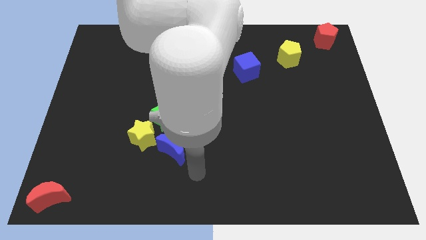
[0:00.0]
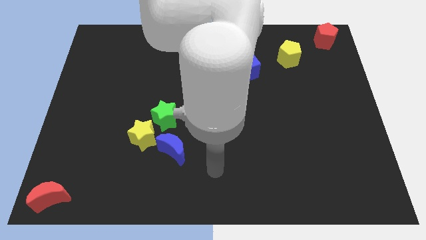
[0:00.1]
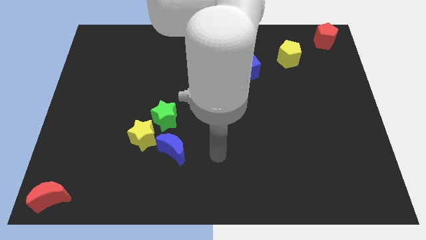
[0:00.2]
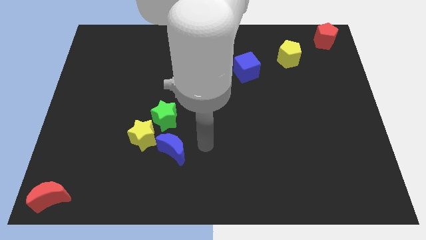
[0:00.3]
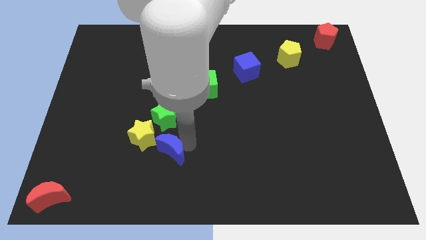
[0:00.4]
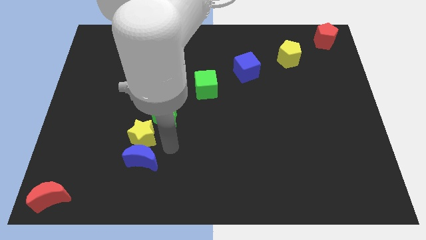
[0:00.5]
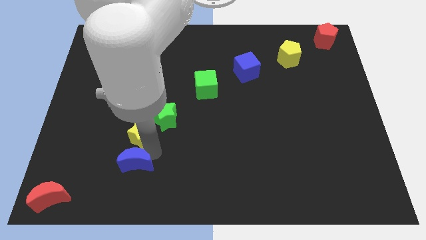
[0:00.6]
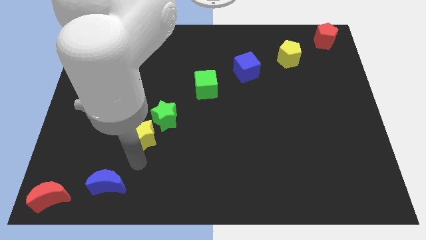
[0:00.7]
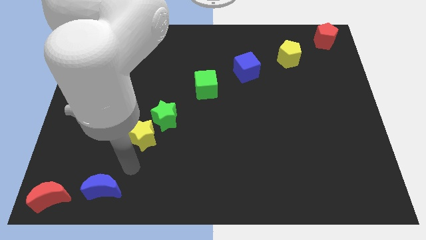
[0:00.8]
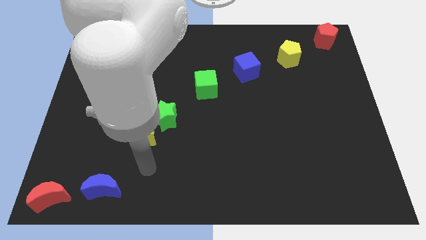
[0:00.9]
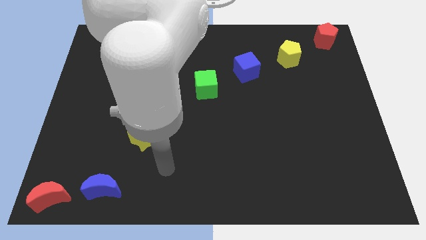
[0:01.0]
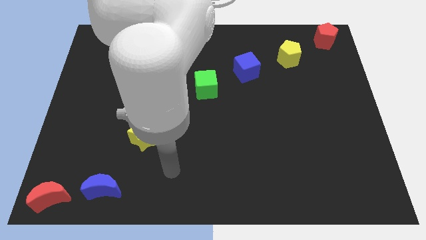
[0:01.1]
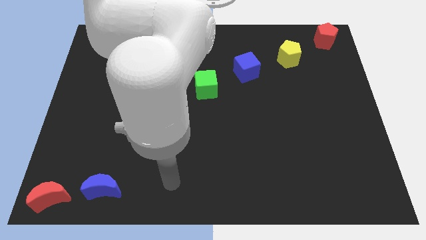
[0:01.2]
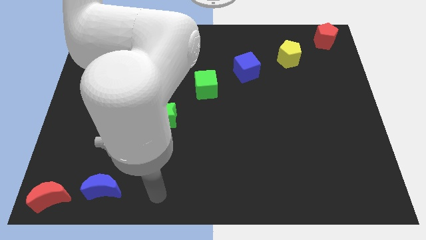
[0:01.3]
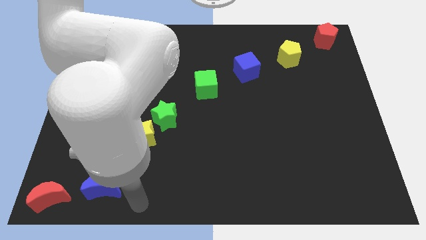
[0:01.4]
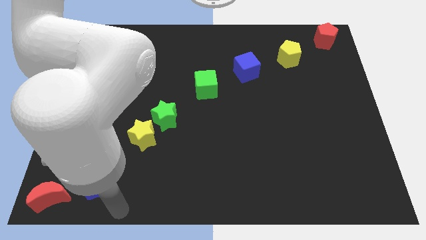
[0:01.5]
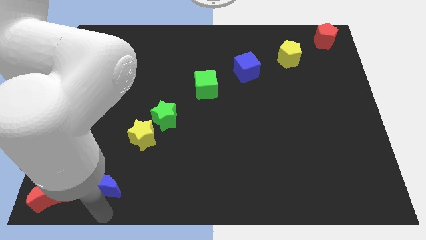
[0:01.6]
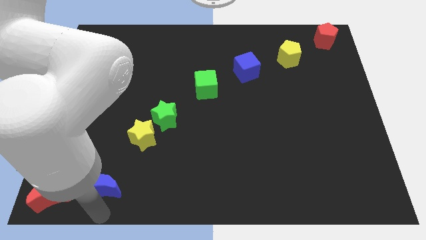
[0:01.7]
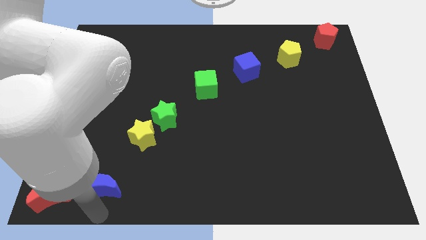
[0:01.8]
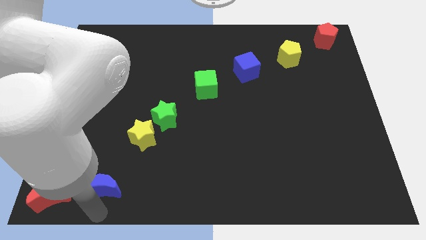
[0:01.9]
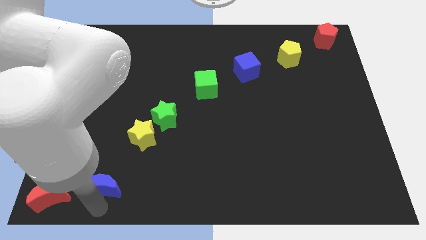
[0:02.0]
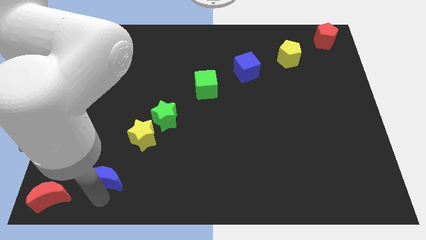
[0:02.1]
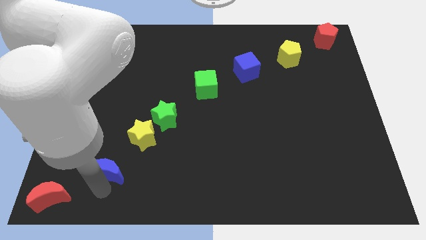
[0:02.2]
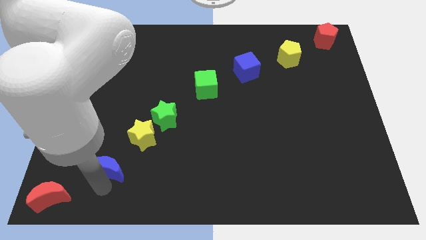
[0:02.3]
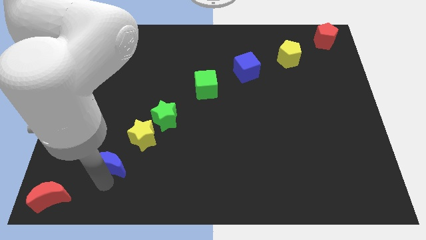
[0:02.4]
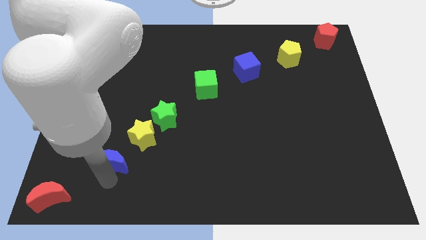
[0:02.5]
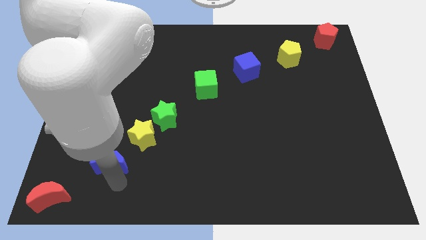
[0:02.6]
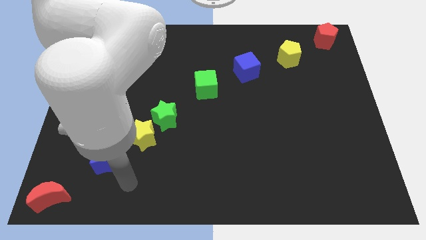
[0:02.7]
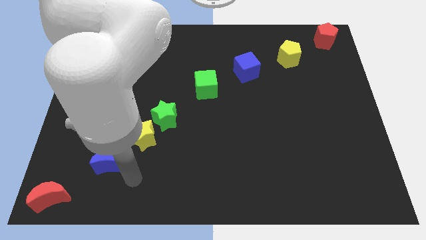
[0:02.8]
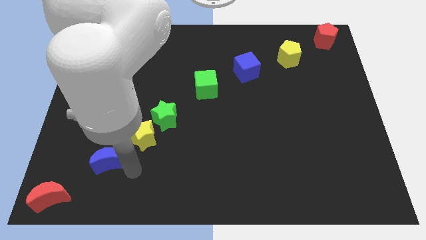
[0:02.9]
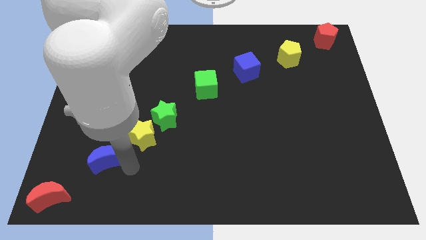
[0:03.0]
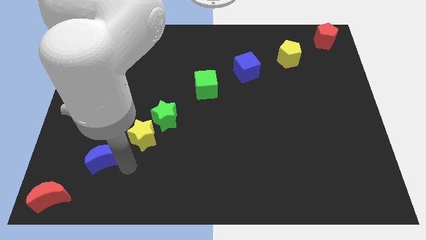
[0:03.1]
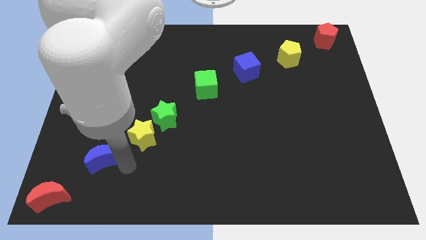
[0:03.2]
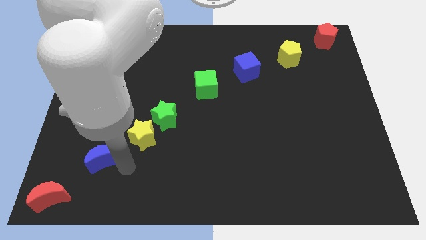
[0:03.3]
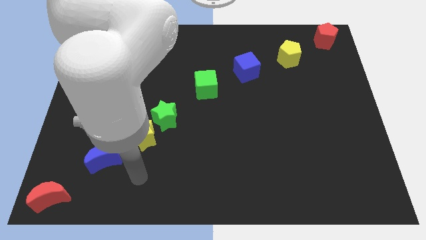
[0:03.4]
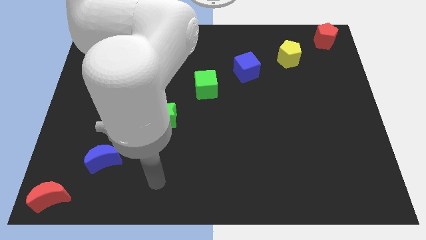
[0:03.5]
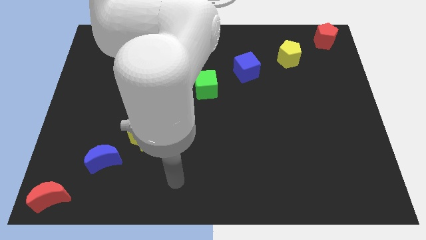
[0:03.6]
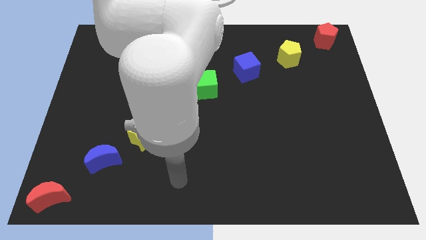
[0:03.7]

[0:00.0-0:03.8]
drag the blue moon diagonally to the bottom left of the yellow star to form a diagonal line

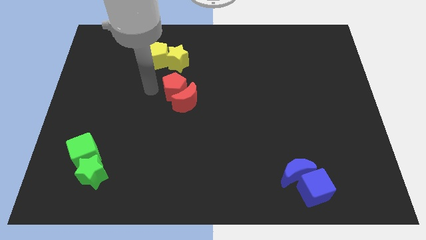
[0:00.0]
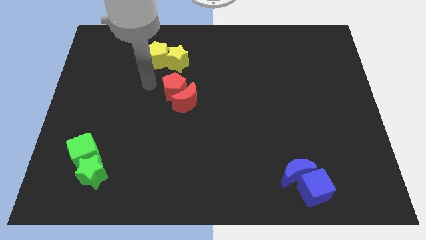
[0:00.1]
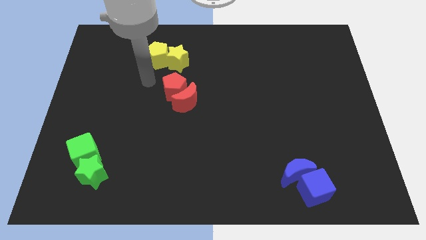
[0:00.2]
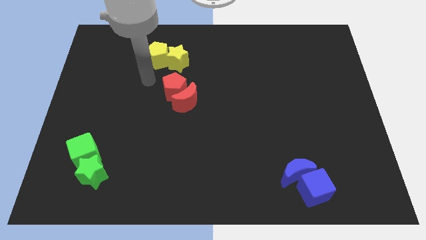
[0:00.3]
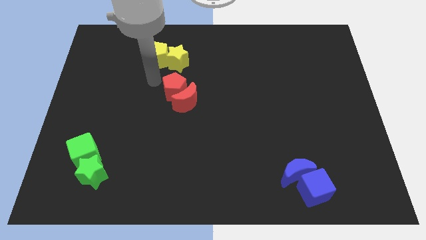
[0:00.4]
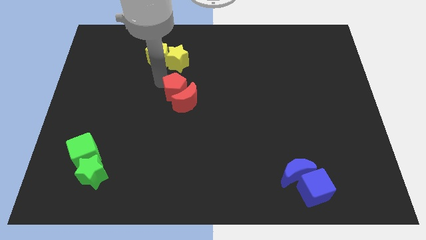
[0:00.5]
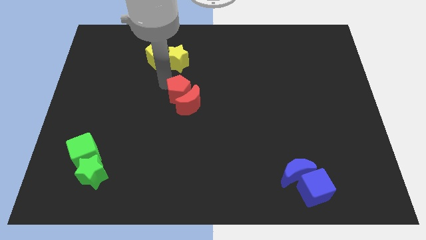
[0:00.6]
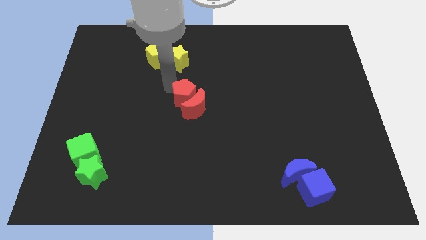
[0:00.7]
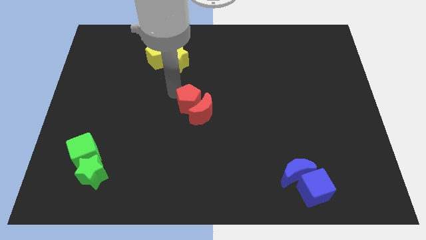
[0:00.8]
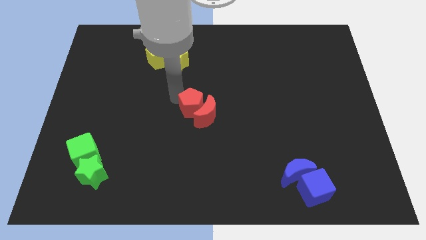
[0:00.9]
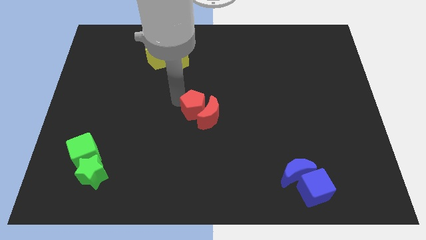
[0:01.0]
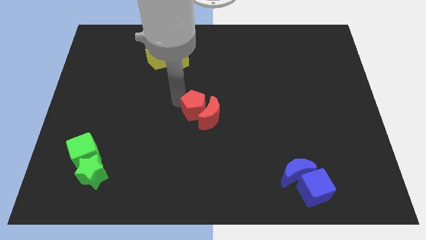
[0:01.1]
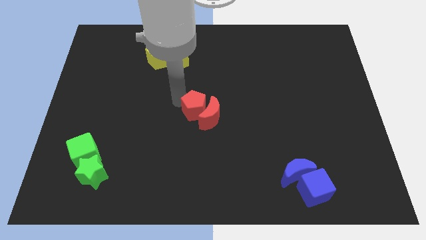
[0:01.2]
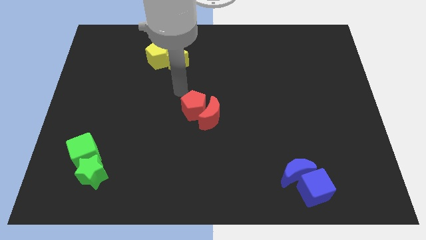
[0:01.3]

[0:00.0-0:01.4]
push the red blocks towards the center of the table

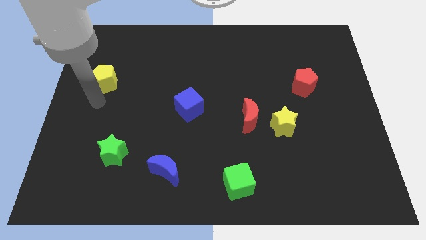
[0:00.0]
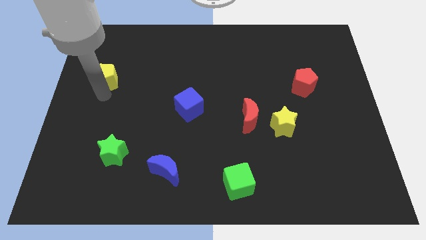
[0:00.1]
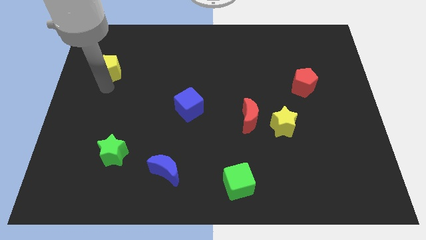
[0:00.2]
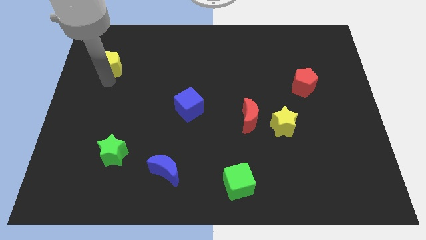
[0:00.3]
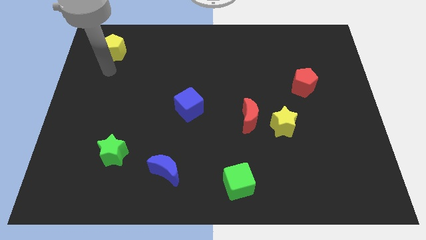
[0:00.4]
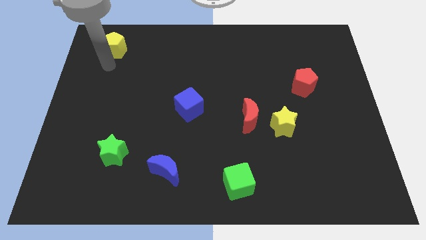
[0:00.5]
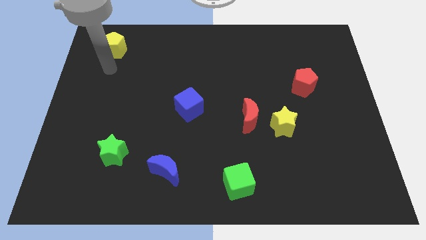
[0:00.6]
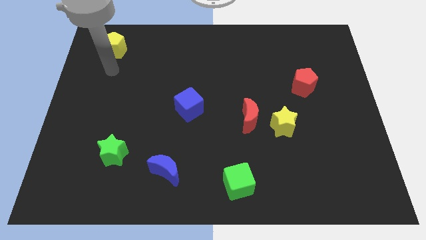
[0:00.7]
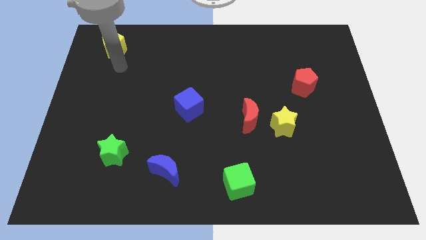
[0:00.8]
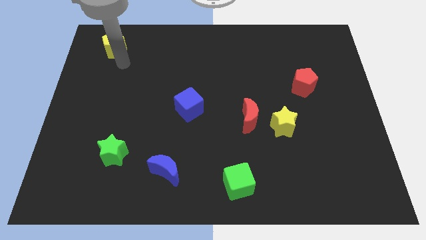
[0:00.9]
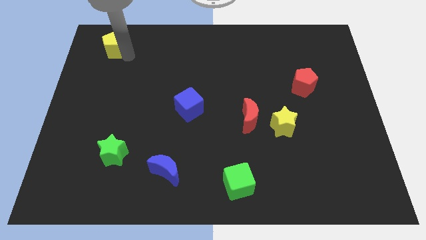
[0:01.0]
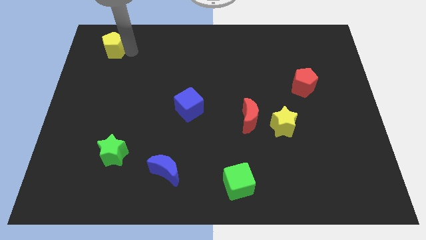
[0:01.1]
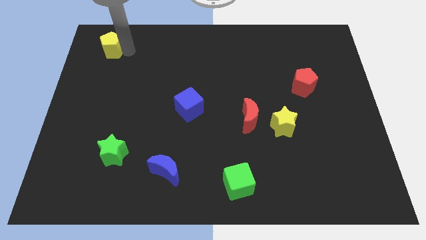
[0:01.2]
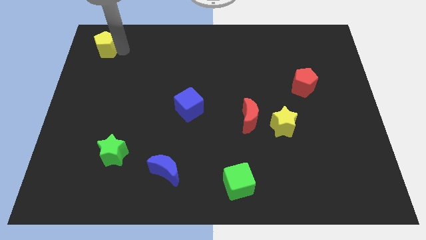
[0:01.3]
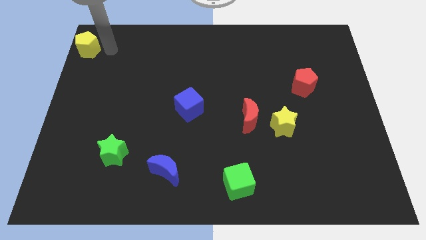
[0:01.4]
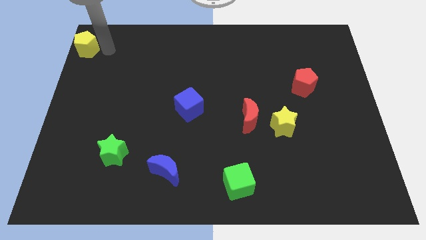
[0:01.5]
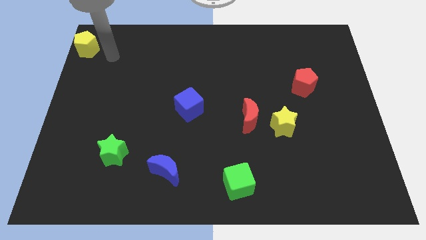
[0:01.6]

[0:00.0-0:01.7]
move the yellow pentagon diagonally to blue cube

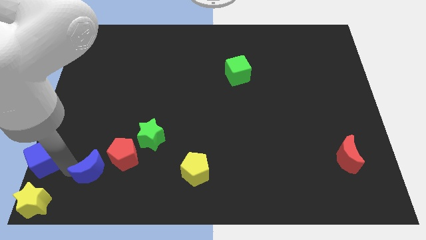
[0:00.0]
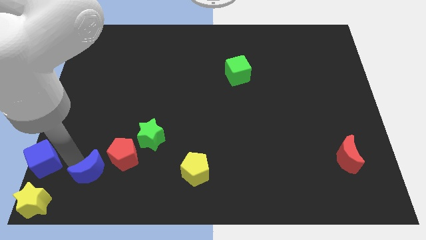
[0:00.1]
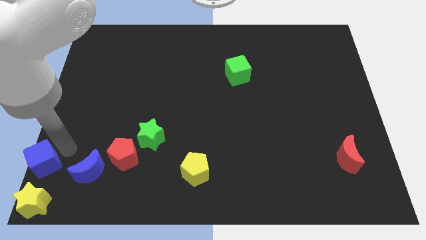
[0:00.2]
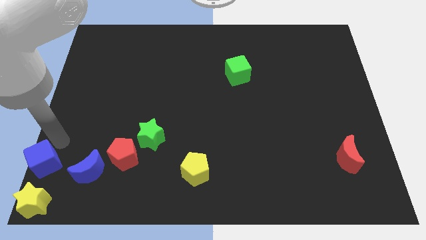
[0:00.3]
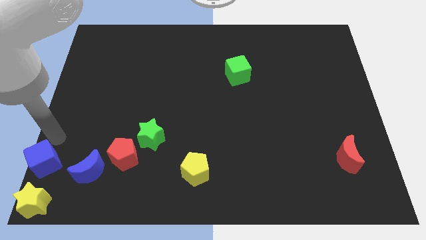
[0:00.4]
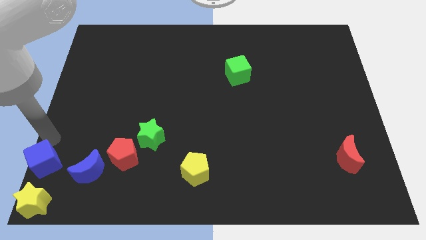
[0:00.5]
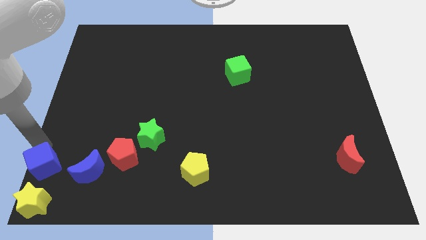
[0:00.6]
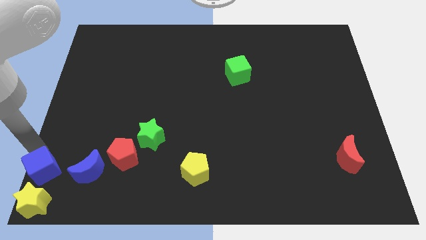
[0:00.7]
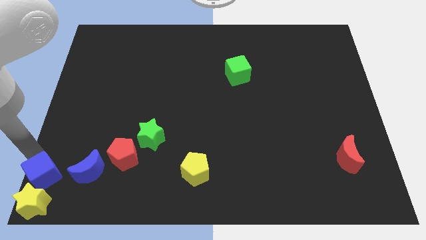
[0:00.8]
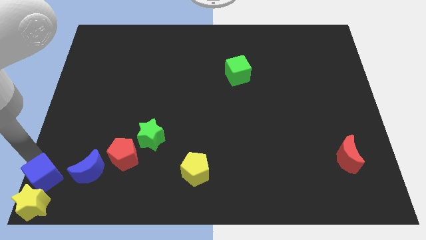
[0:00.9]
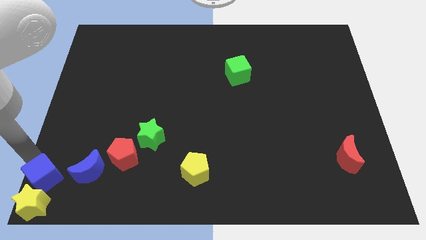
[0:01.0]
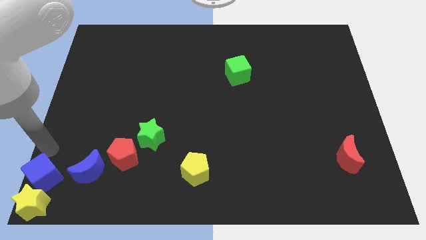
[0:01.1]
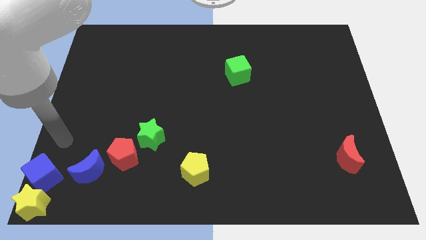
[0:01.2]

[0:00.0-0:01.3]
push the blue cube into yellow star

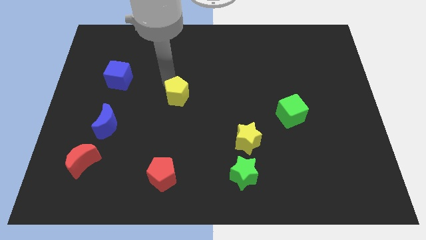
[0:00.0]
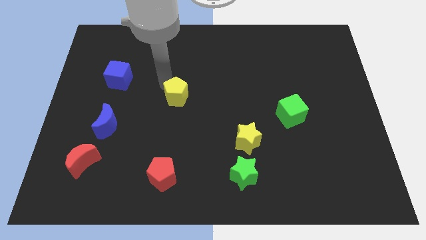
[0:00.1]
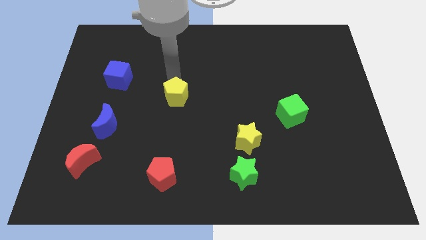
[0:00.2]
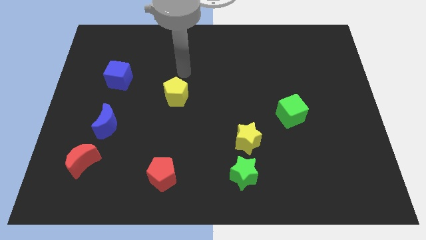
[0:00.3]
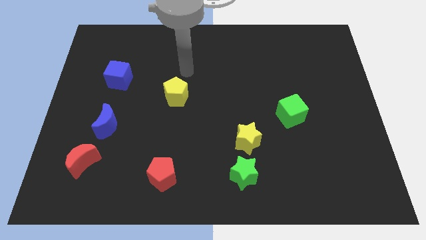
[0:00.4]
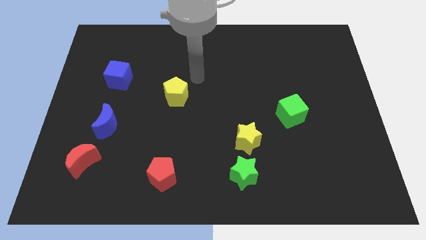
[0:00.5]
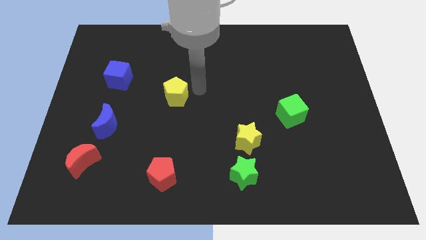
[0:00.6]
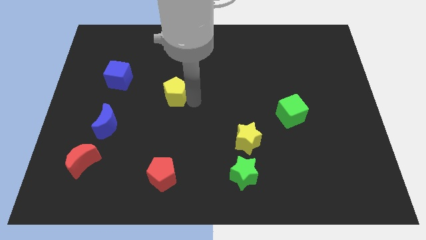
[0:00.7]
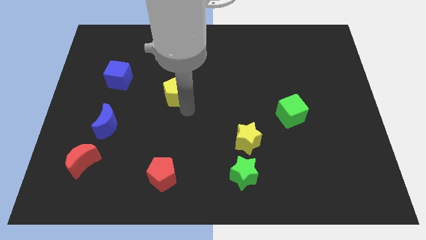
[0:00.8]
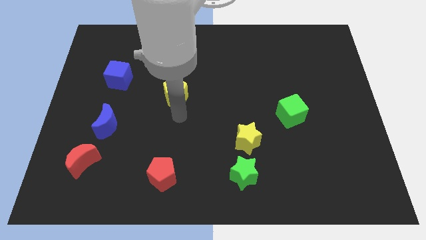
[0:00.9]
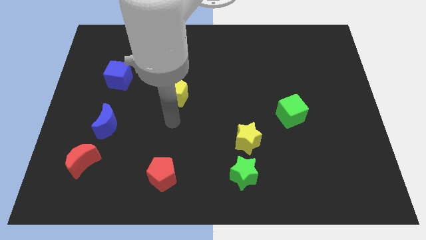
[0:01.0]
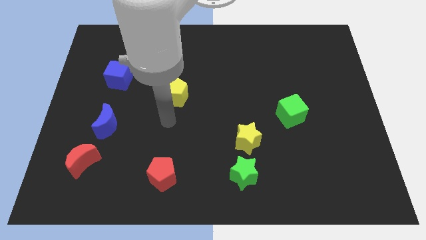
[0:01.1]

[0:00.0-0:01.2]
move your arm to the bottom of the yellow pentagon
